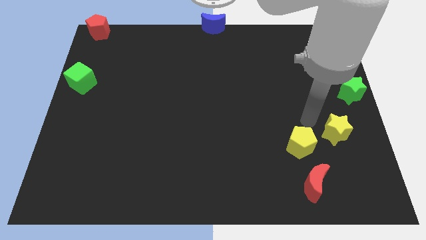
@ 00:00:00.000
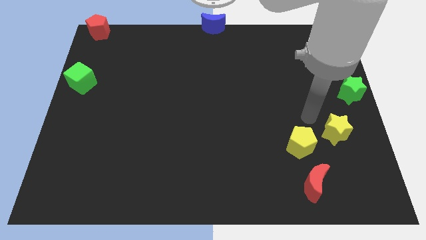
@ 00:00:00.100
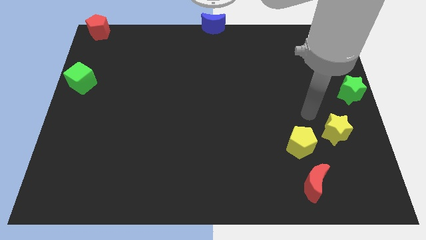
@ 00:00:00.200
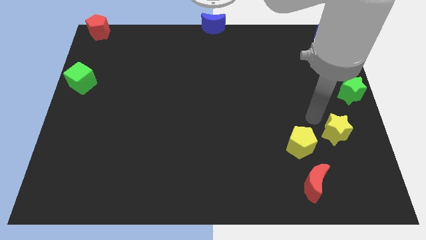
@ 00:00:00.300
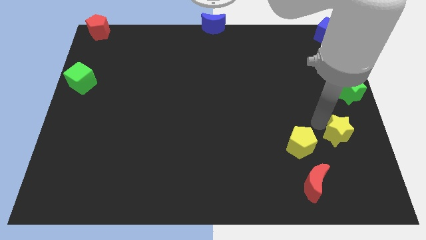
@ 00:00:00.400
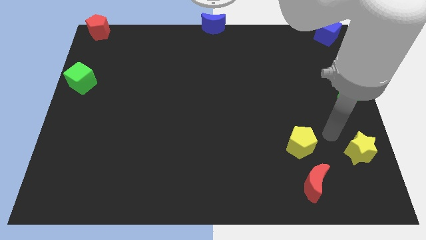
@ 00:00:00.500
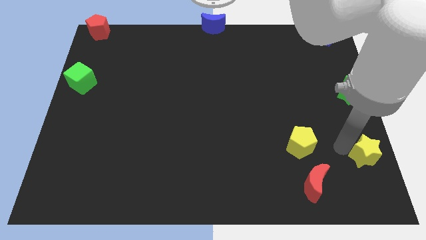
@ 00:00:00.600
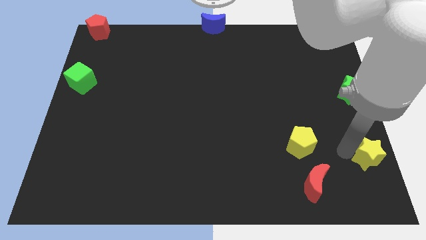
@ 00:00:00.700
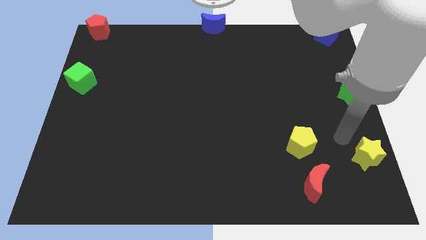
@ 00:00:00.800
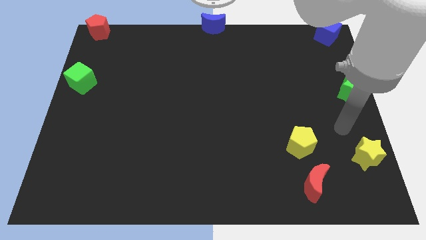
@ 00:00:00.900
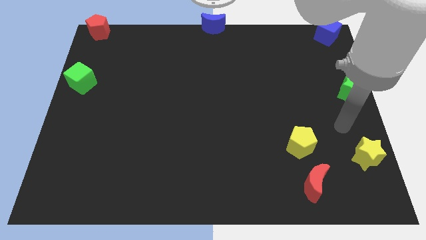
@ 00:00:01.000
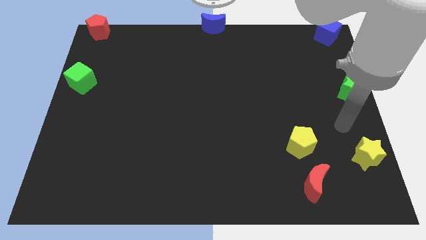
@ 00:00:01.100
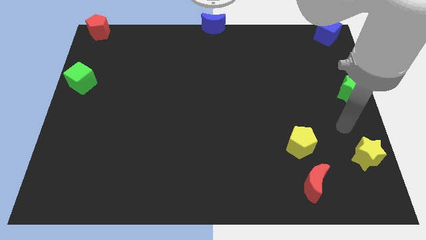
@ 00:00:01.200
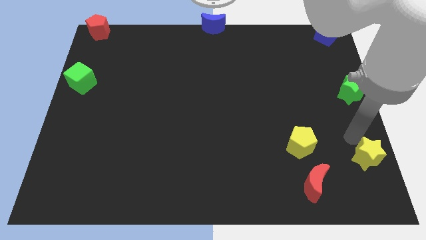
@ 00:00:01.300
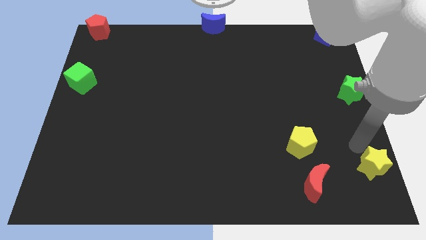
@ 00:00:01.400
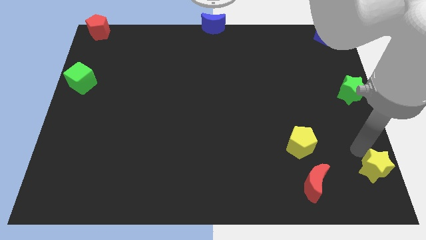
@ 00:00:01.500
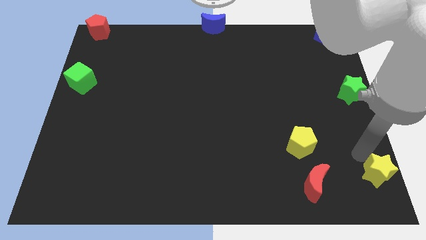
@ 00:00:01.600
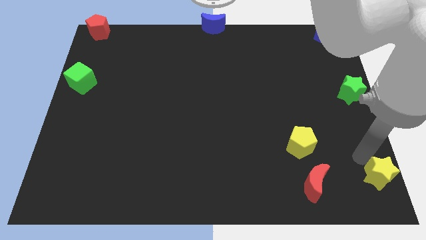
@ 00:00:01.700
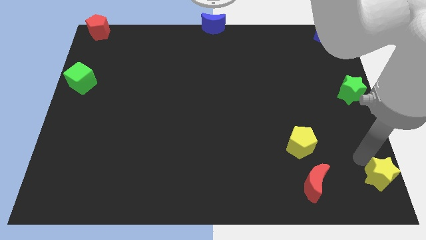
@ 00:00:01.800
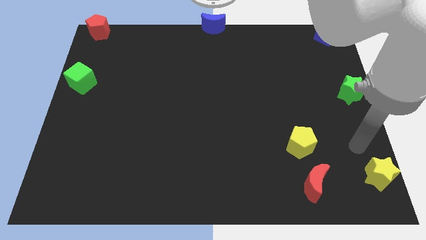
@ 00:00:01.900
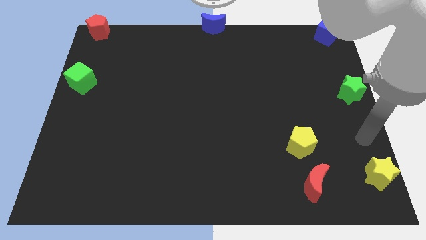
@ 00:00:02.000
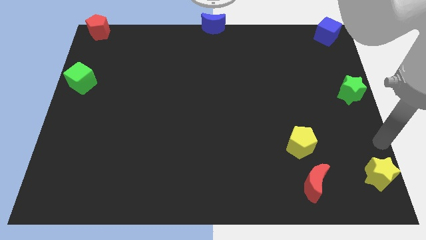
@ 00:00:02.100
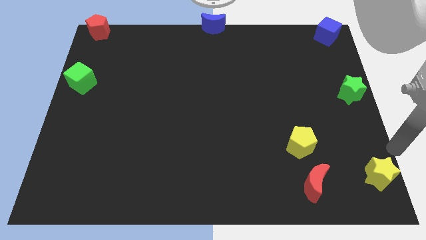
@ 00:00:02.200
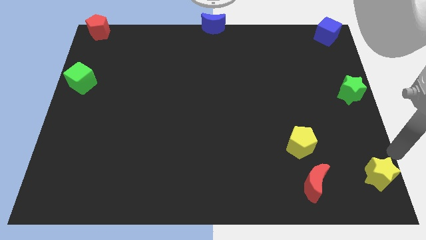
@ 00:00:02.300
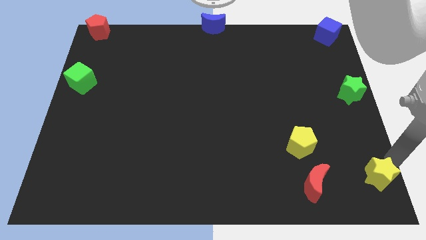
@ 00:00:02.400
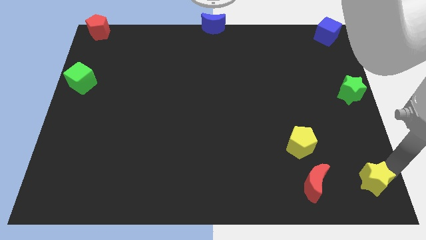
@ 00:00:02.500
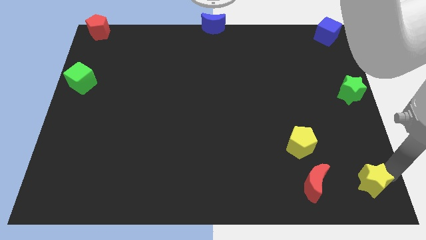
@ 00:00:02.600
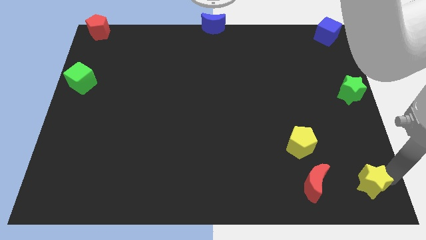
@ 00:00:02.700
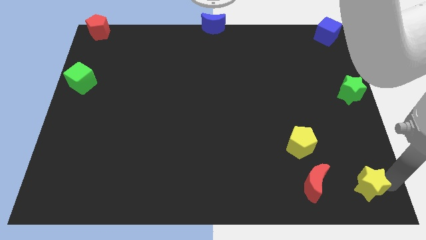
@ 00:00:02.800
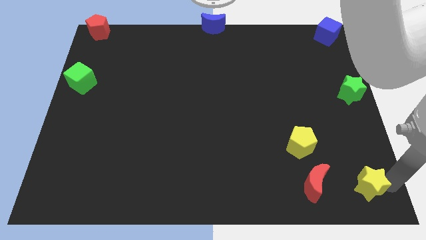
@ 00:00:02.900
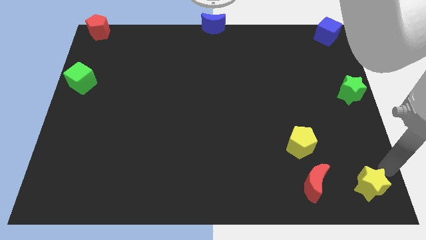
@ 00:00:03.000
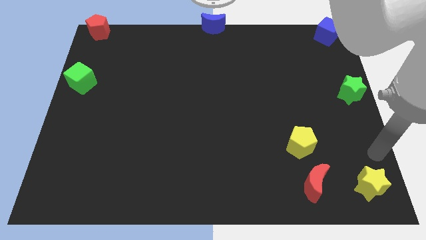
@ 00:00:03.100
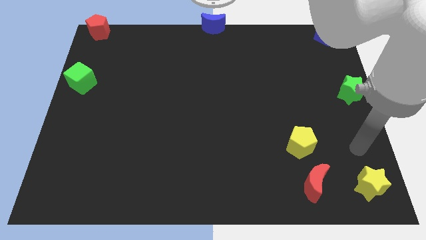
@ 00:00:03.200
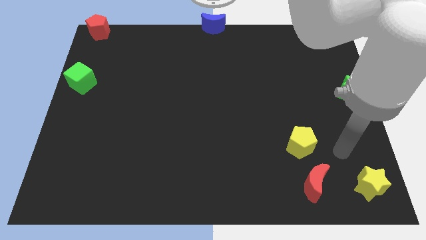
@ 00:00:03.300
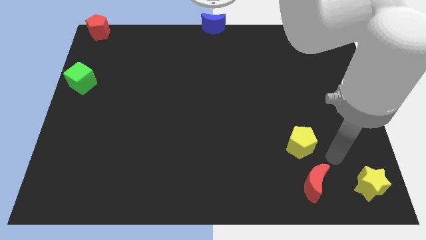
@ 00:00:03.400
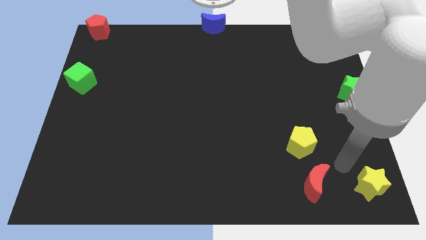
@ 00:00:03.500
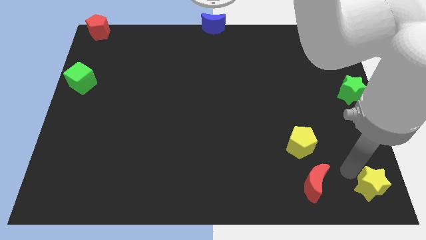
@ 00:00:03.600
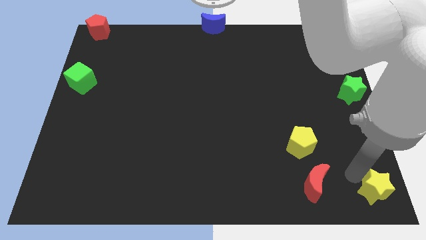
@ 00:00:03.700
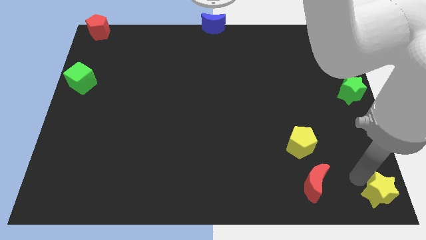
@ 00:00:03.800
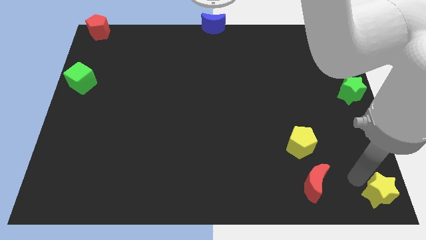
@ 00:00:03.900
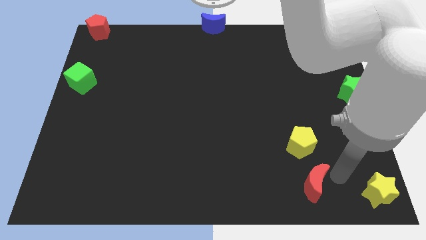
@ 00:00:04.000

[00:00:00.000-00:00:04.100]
place the yellow star to the bottom right corner of the board

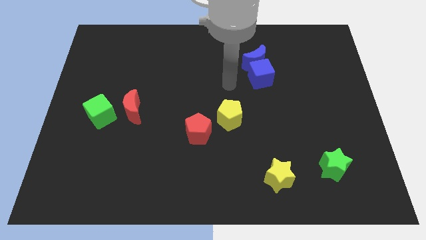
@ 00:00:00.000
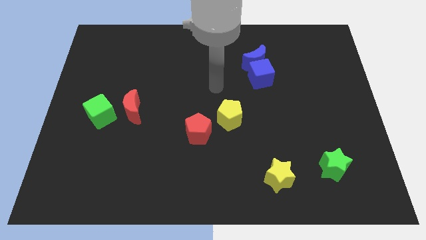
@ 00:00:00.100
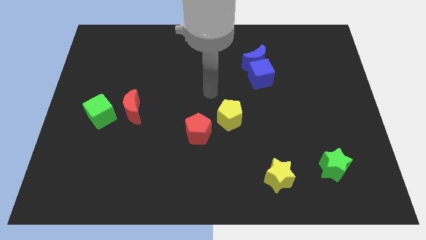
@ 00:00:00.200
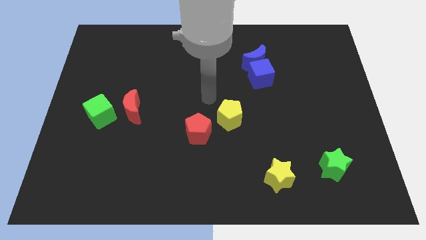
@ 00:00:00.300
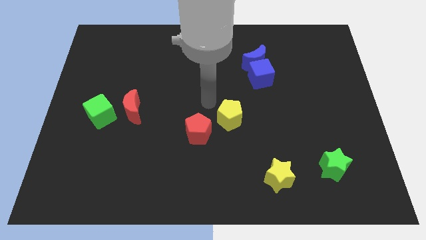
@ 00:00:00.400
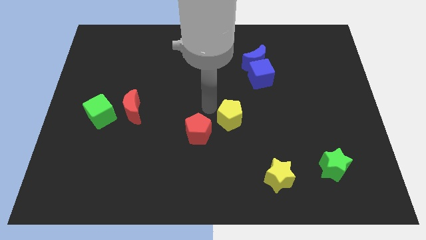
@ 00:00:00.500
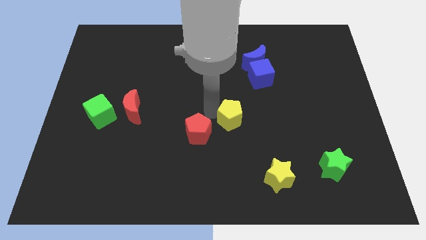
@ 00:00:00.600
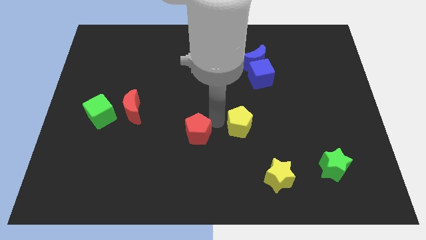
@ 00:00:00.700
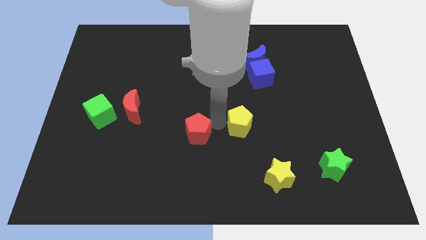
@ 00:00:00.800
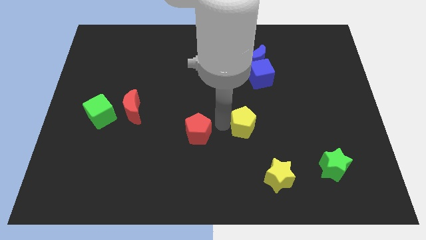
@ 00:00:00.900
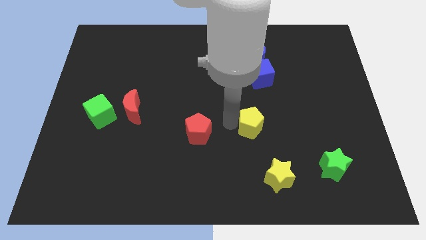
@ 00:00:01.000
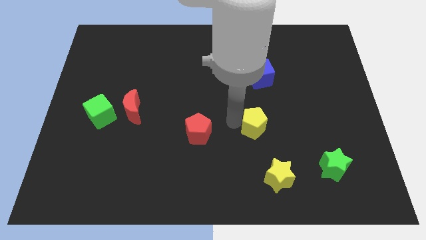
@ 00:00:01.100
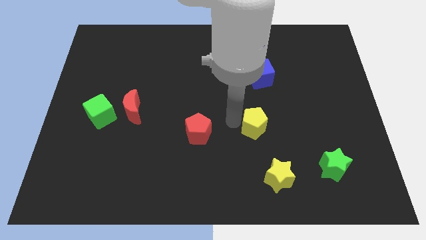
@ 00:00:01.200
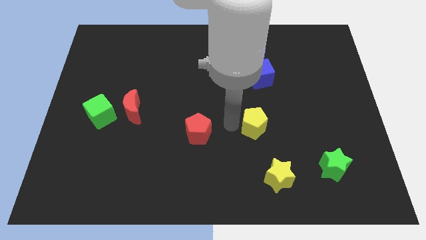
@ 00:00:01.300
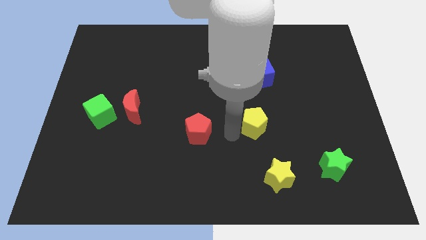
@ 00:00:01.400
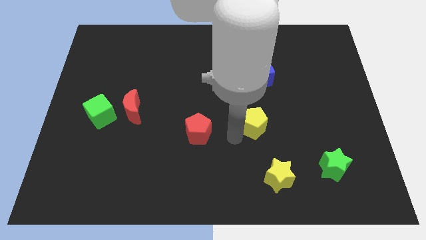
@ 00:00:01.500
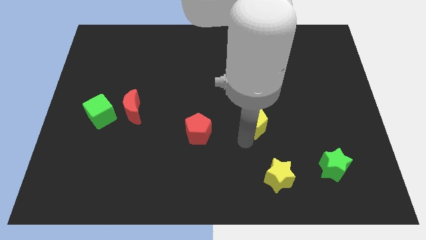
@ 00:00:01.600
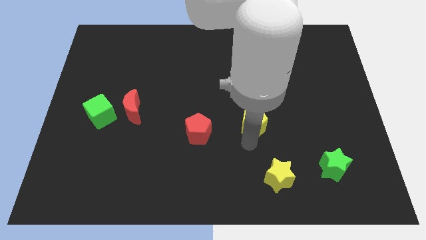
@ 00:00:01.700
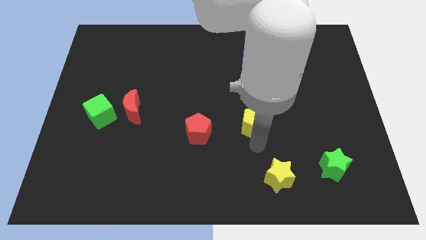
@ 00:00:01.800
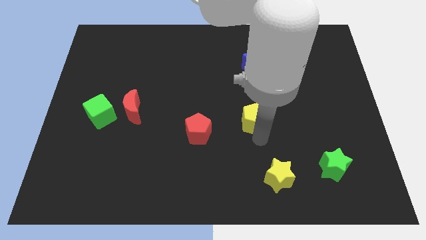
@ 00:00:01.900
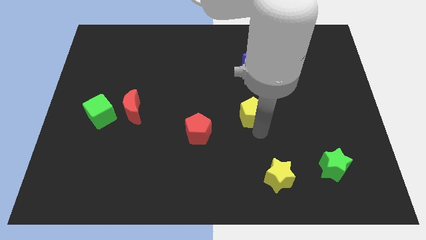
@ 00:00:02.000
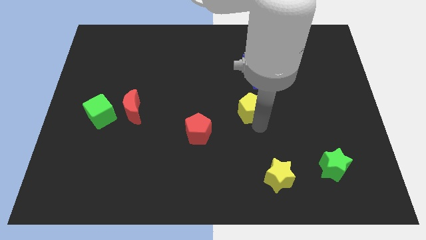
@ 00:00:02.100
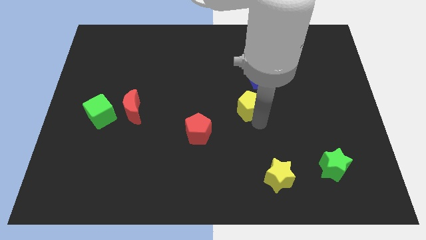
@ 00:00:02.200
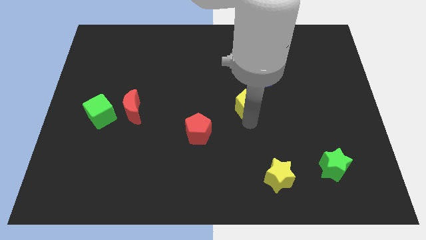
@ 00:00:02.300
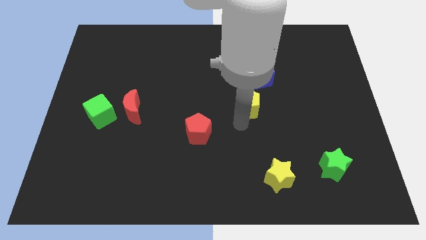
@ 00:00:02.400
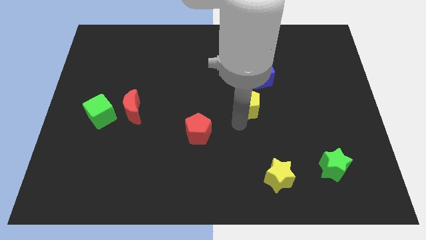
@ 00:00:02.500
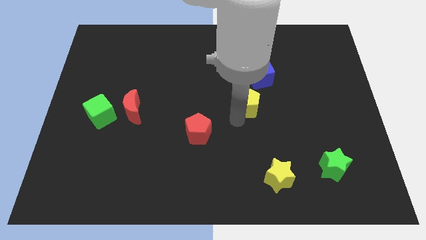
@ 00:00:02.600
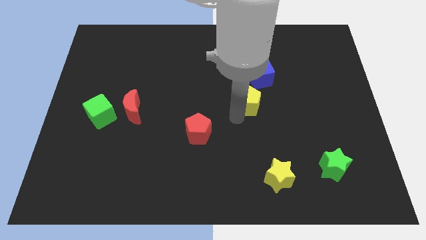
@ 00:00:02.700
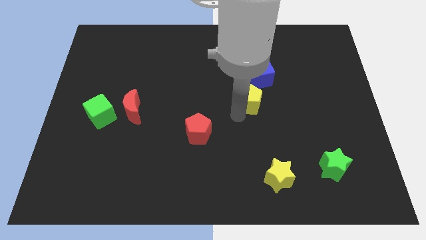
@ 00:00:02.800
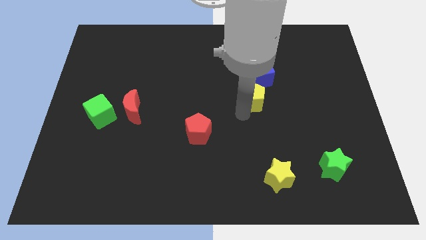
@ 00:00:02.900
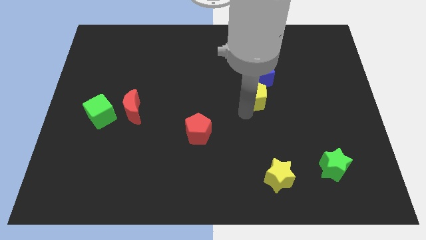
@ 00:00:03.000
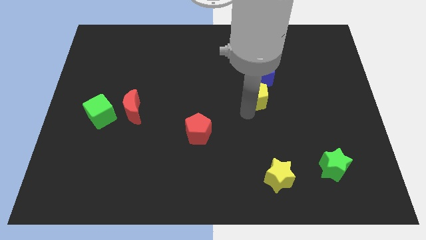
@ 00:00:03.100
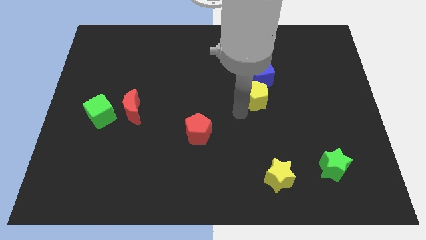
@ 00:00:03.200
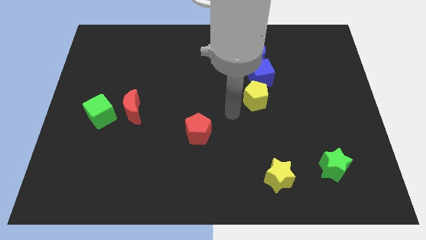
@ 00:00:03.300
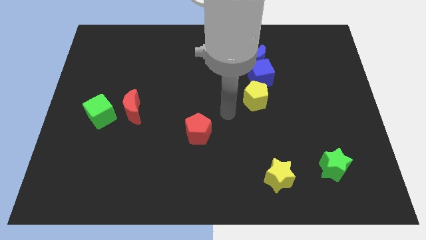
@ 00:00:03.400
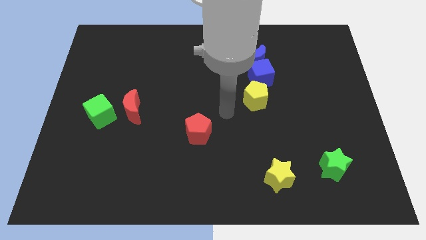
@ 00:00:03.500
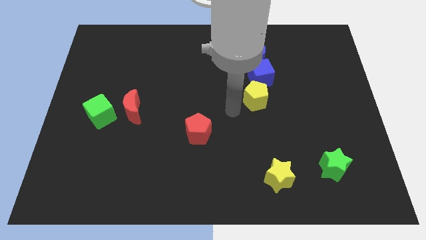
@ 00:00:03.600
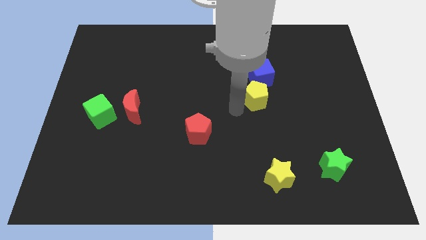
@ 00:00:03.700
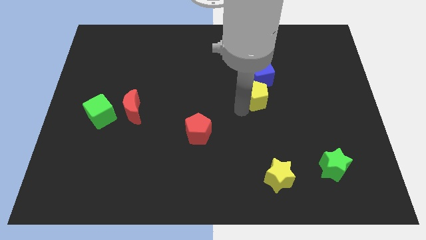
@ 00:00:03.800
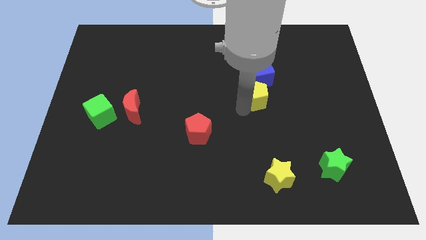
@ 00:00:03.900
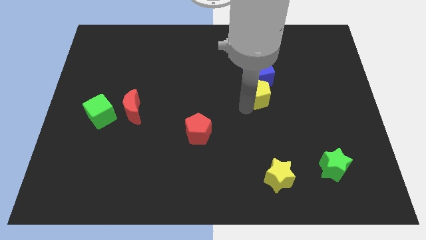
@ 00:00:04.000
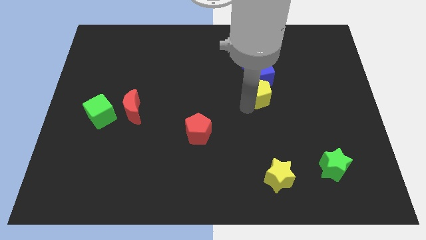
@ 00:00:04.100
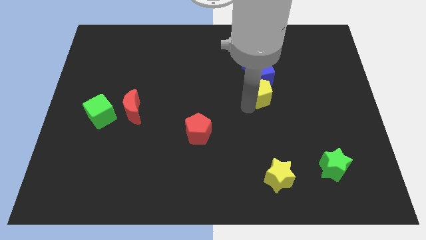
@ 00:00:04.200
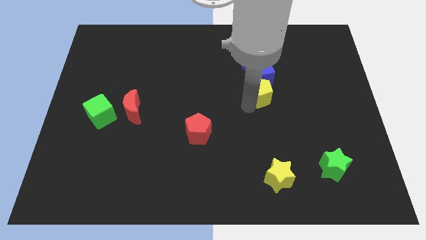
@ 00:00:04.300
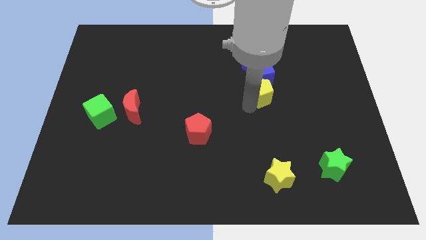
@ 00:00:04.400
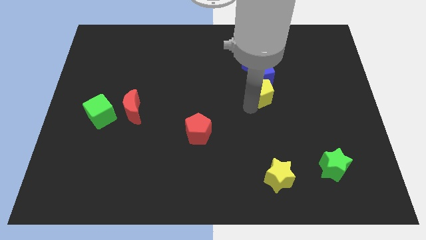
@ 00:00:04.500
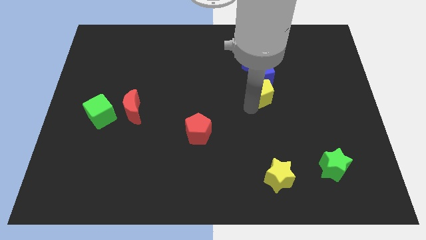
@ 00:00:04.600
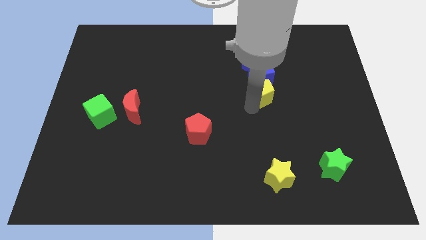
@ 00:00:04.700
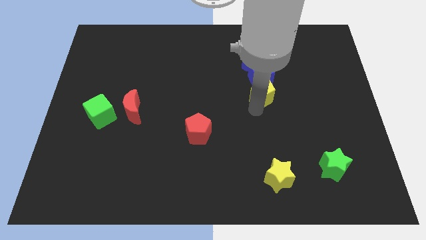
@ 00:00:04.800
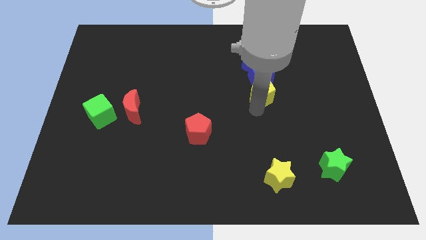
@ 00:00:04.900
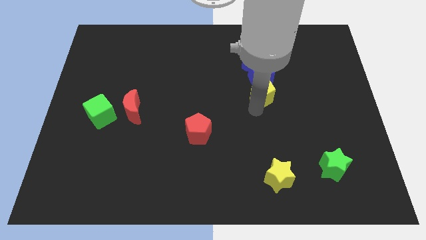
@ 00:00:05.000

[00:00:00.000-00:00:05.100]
move the yellow pentagon to the bottom left side of the blue cube
